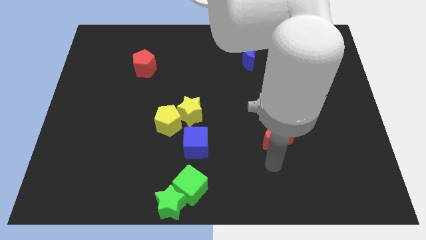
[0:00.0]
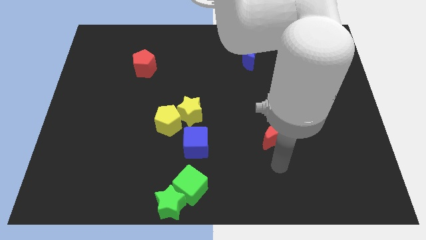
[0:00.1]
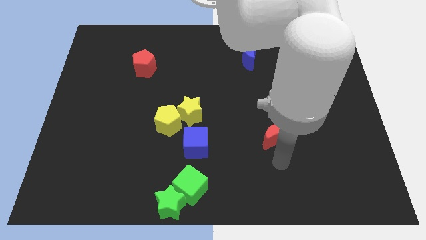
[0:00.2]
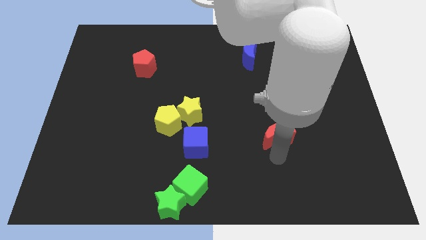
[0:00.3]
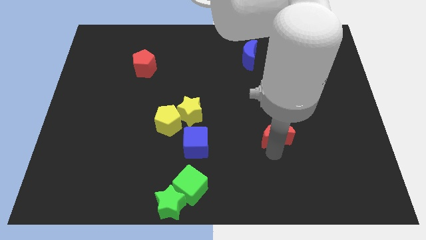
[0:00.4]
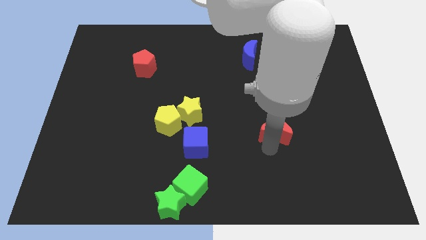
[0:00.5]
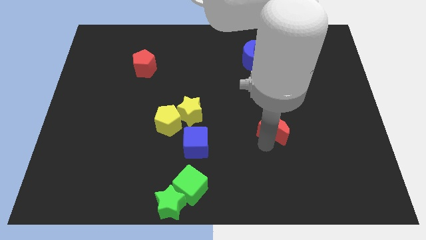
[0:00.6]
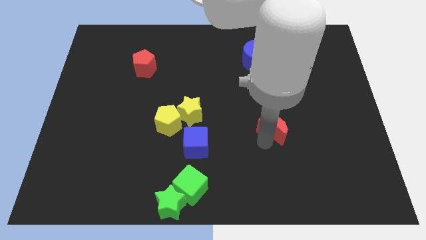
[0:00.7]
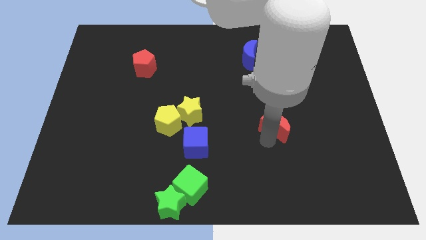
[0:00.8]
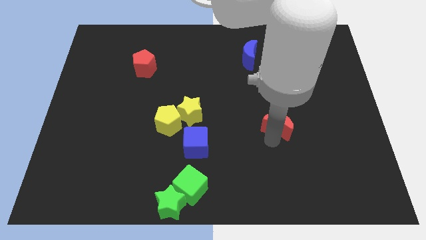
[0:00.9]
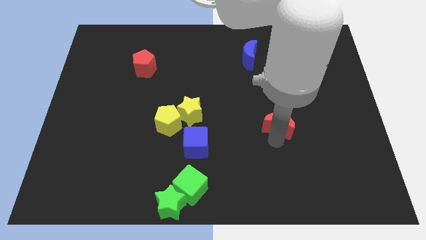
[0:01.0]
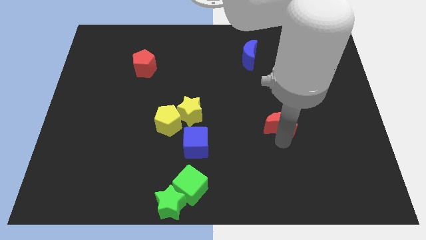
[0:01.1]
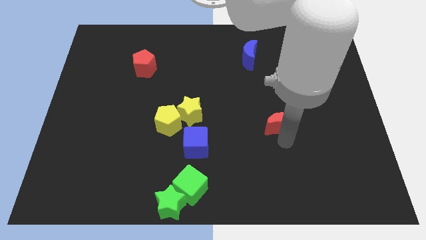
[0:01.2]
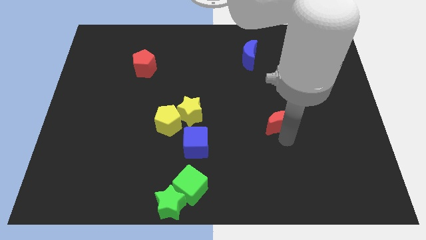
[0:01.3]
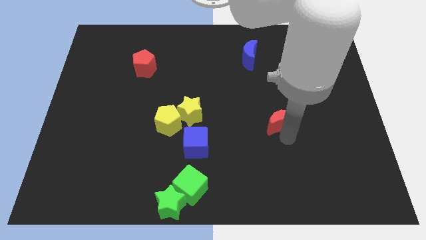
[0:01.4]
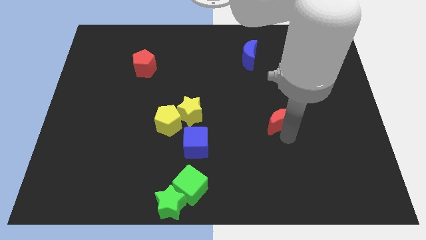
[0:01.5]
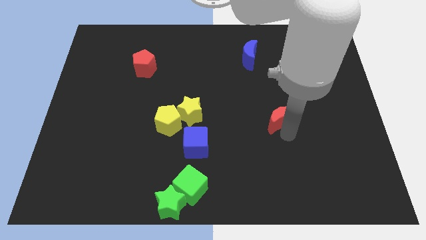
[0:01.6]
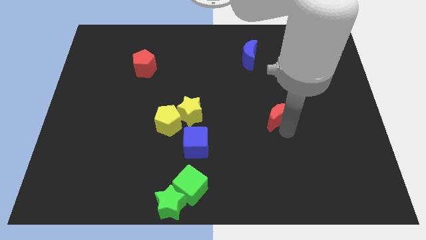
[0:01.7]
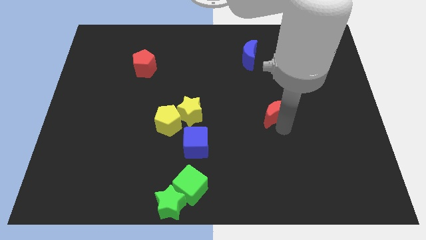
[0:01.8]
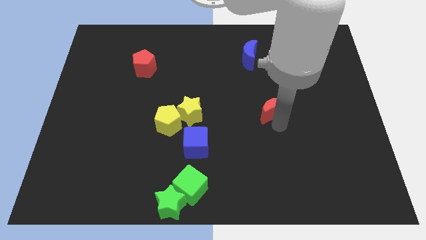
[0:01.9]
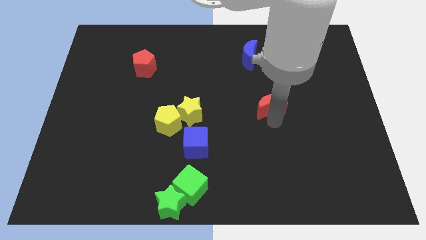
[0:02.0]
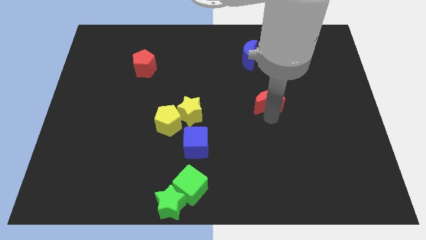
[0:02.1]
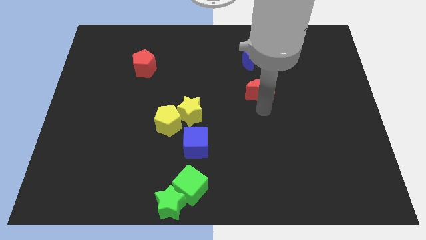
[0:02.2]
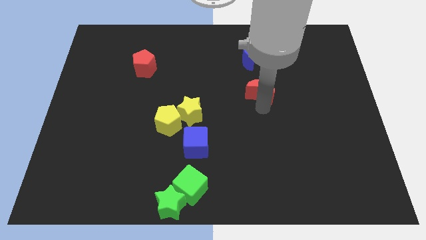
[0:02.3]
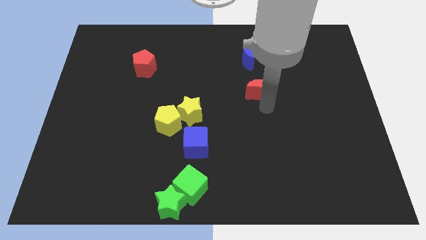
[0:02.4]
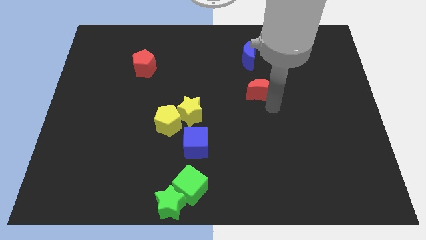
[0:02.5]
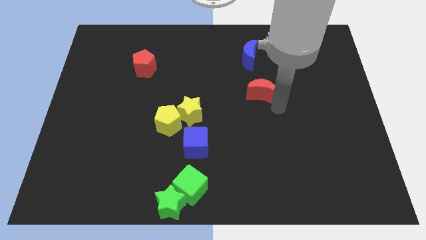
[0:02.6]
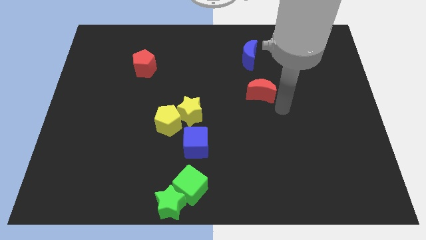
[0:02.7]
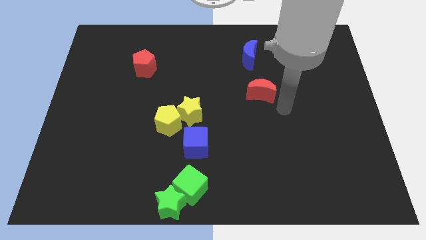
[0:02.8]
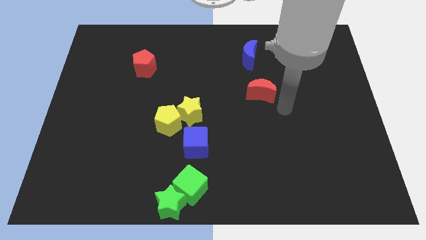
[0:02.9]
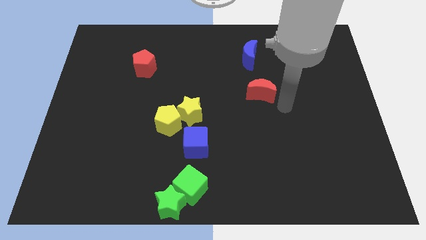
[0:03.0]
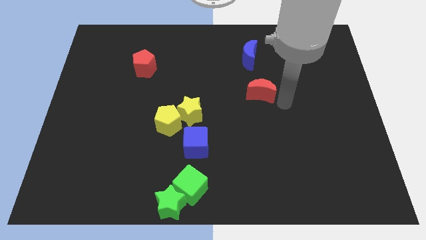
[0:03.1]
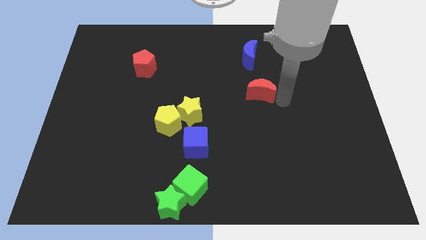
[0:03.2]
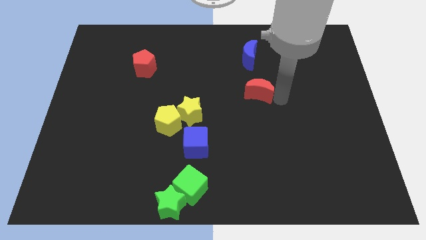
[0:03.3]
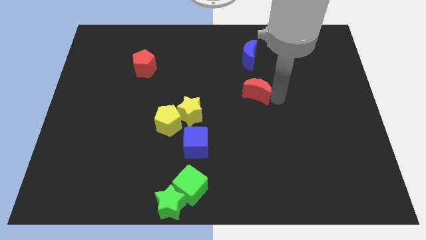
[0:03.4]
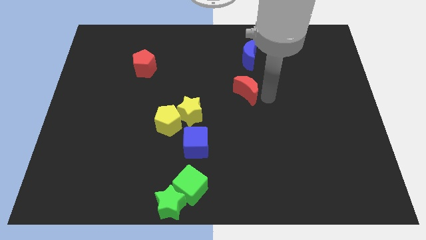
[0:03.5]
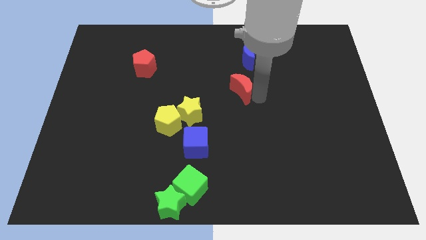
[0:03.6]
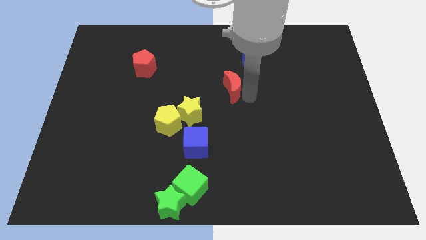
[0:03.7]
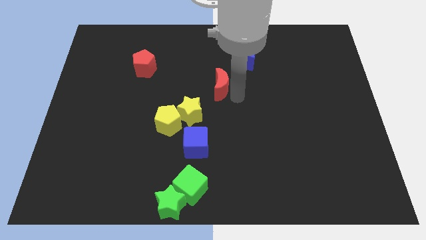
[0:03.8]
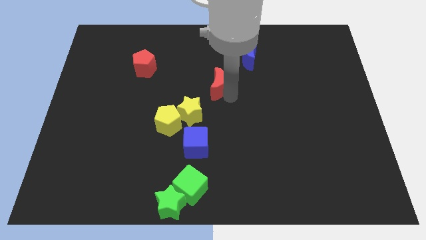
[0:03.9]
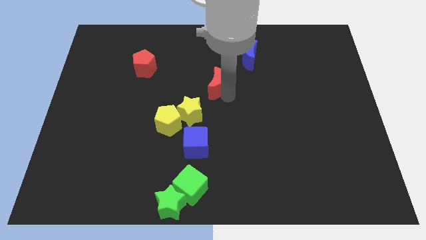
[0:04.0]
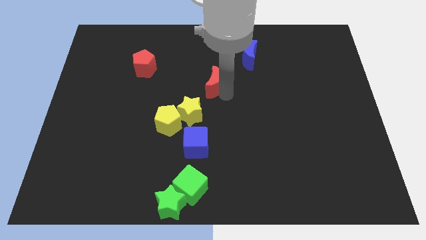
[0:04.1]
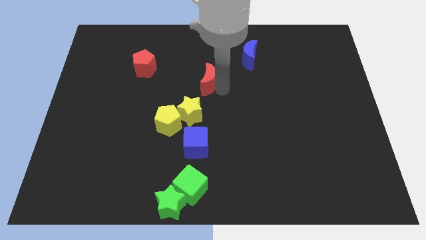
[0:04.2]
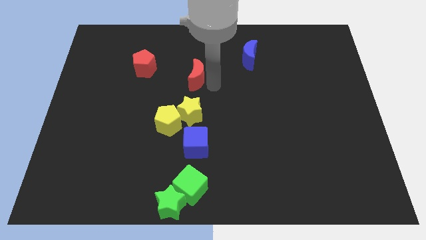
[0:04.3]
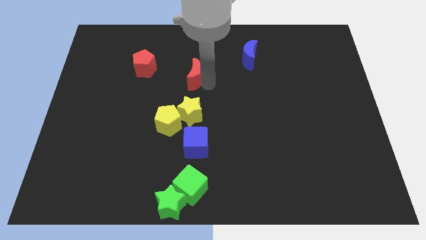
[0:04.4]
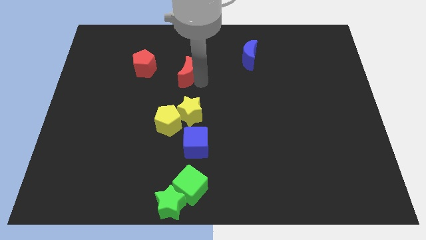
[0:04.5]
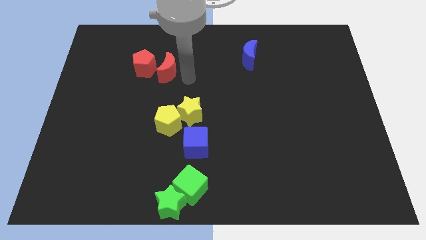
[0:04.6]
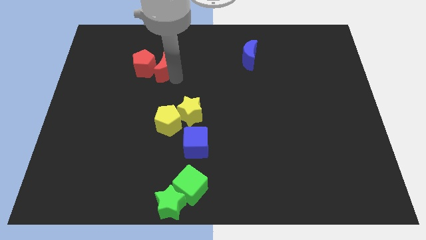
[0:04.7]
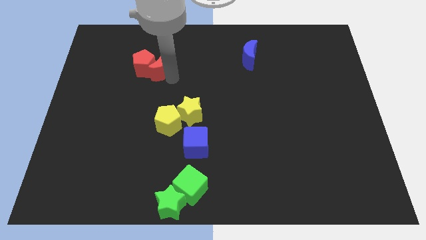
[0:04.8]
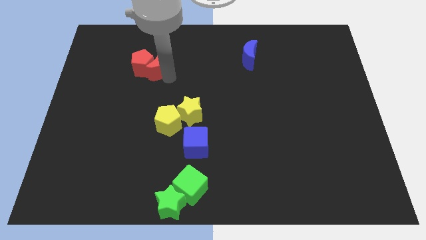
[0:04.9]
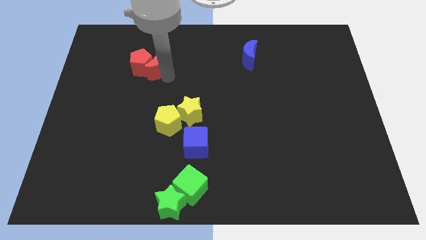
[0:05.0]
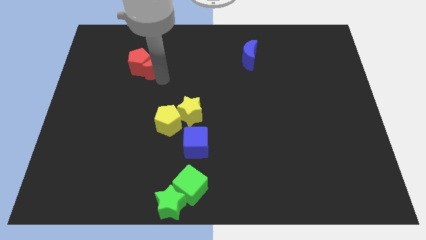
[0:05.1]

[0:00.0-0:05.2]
push all red blocks at the left side of the blue crescent

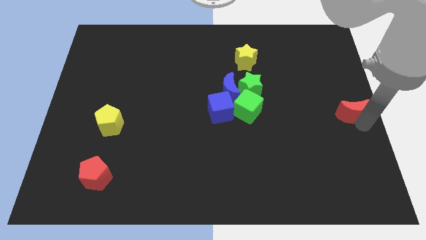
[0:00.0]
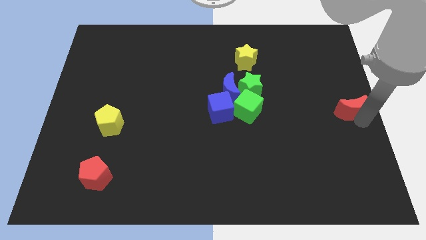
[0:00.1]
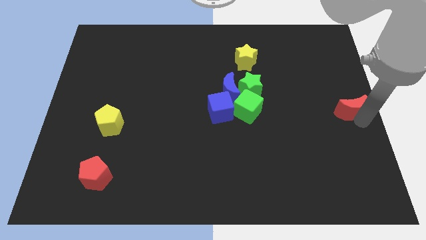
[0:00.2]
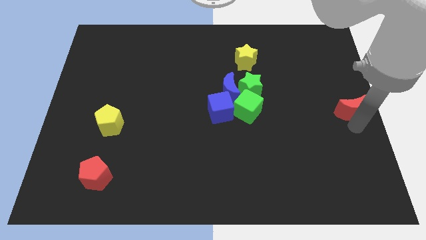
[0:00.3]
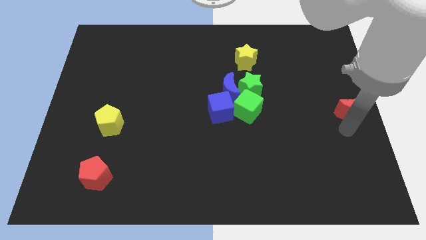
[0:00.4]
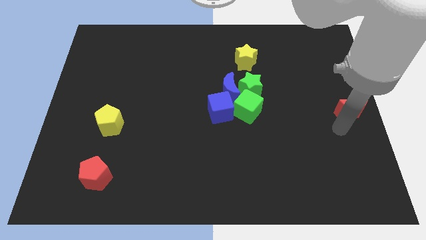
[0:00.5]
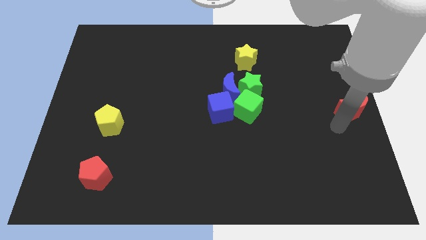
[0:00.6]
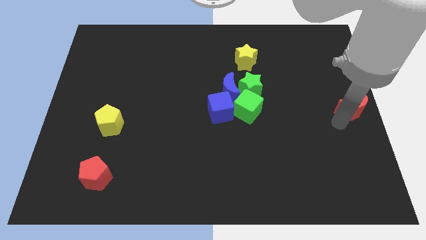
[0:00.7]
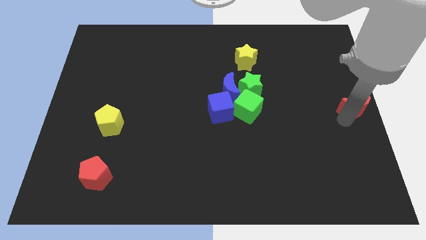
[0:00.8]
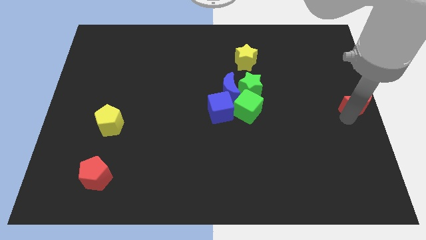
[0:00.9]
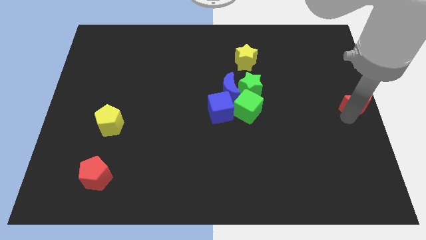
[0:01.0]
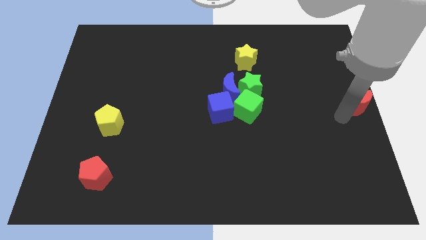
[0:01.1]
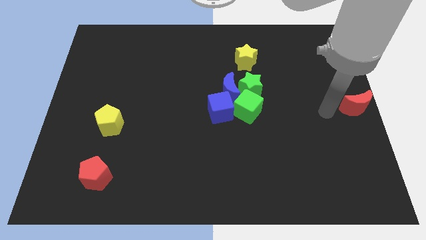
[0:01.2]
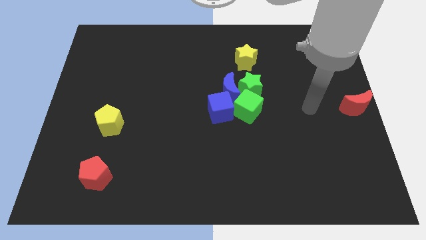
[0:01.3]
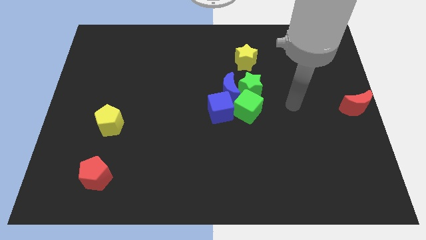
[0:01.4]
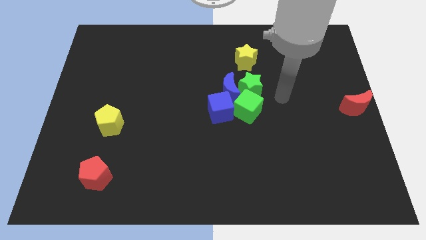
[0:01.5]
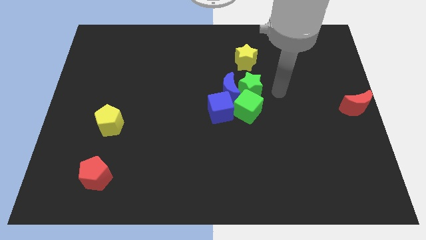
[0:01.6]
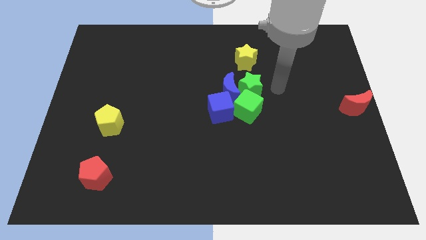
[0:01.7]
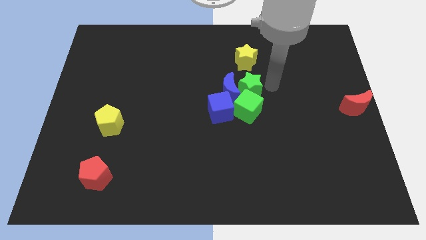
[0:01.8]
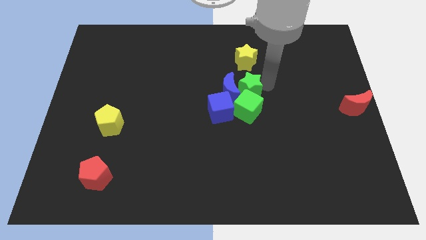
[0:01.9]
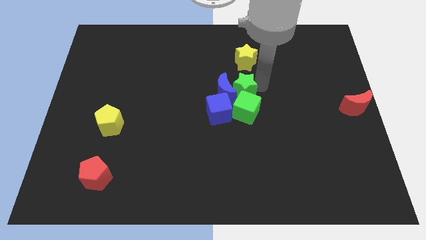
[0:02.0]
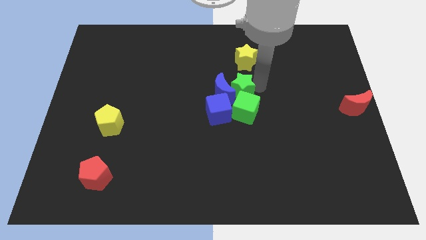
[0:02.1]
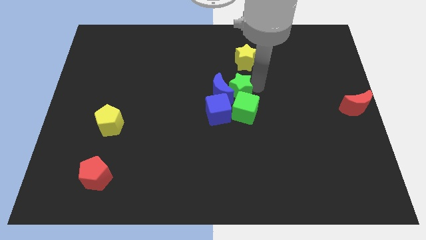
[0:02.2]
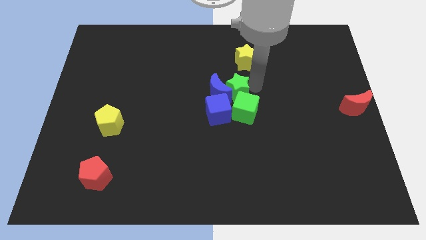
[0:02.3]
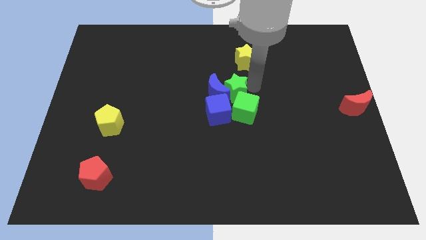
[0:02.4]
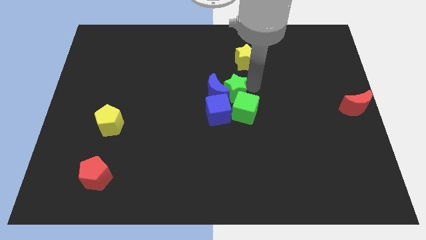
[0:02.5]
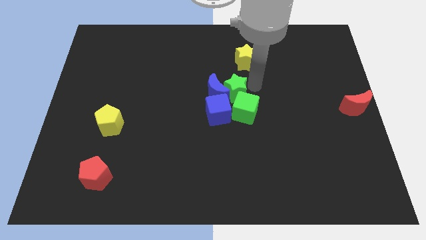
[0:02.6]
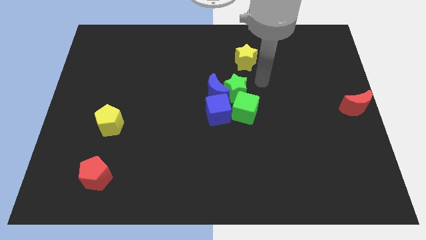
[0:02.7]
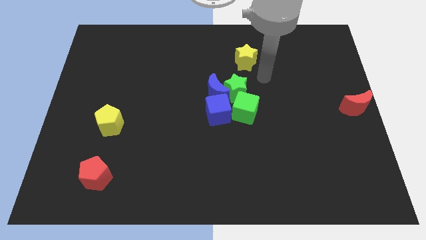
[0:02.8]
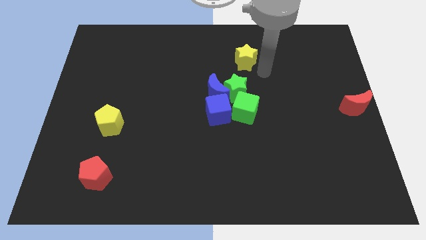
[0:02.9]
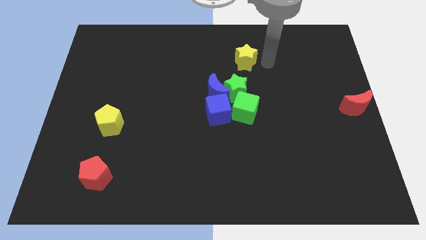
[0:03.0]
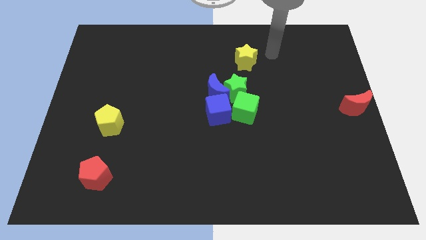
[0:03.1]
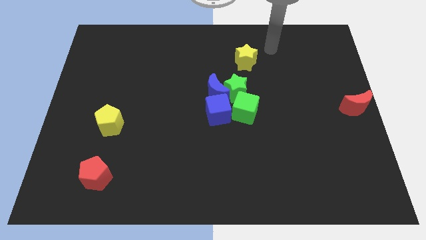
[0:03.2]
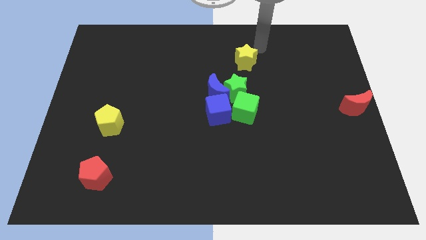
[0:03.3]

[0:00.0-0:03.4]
push the blue crescent to the left side with the help of green star

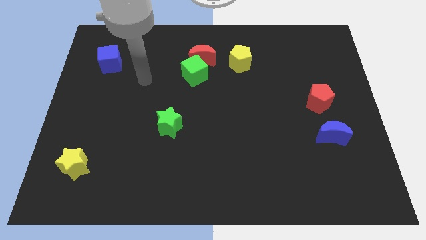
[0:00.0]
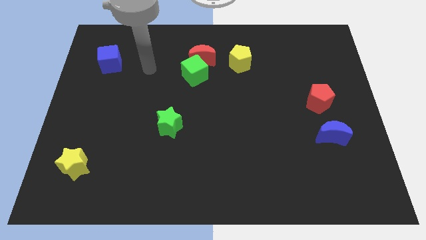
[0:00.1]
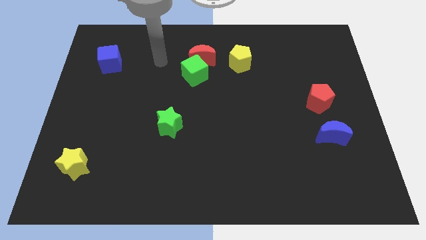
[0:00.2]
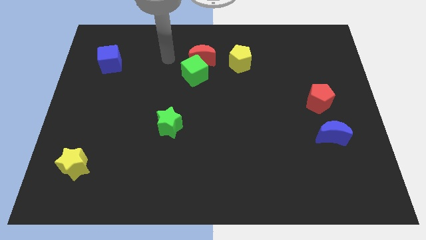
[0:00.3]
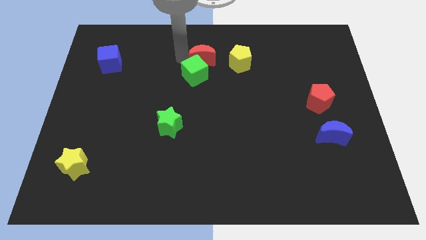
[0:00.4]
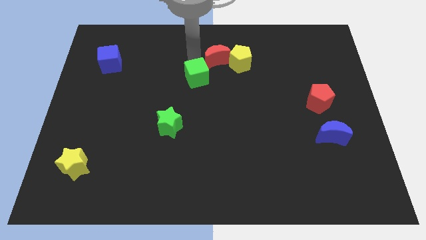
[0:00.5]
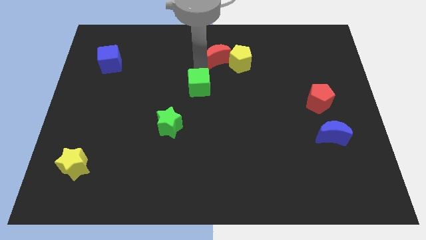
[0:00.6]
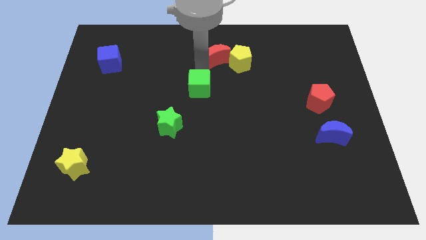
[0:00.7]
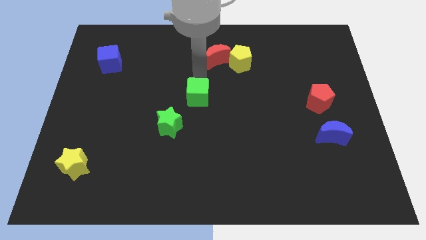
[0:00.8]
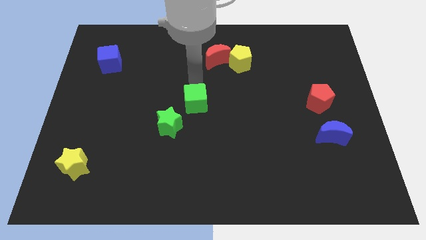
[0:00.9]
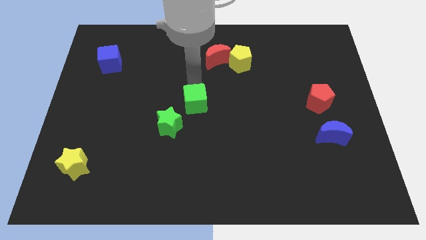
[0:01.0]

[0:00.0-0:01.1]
separate green cube from red moon
